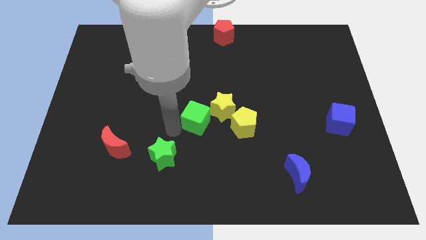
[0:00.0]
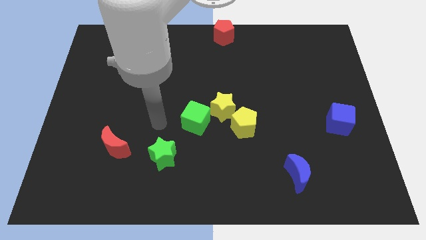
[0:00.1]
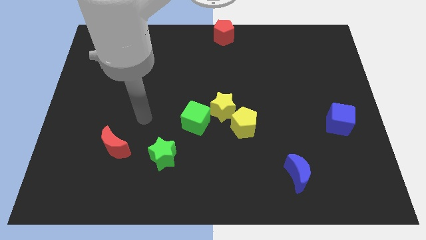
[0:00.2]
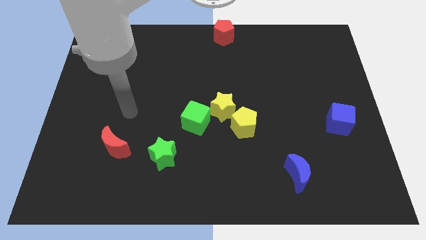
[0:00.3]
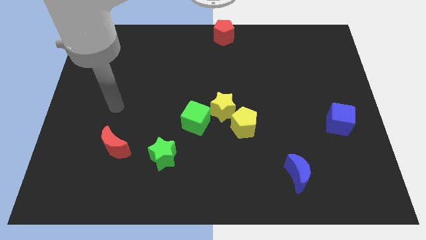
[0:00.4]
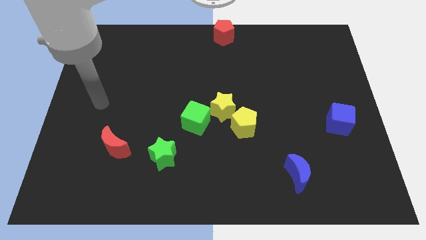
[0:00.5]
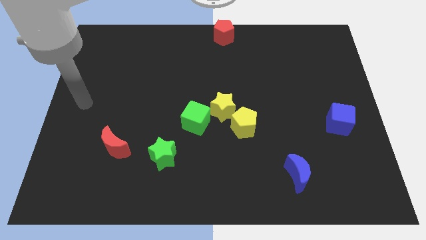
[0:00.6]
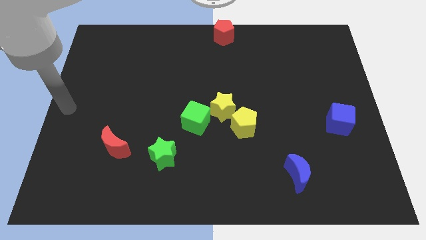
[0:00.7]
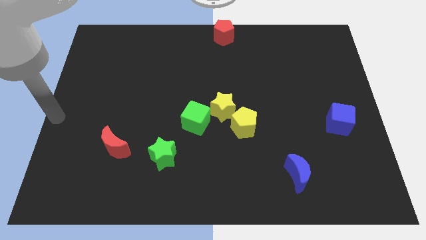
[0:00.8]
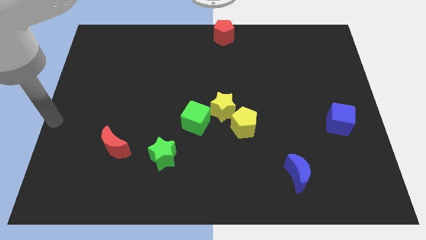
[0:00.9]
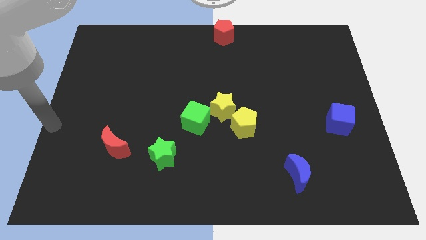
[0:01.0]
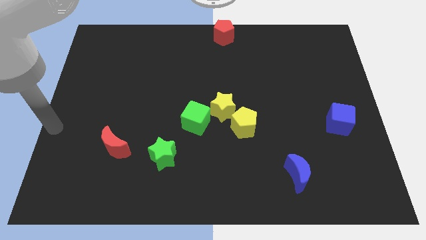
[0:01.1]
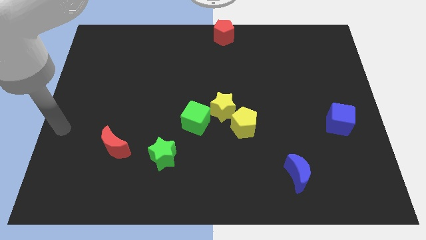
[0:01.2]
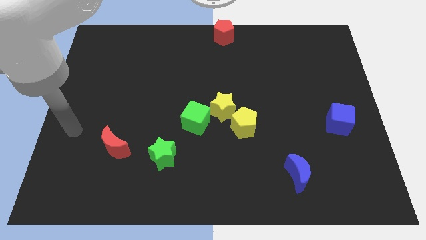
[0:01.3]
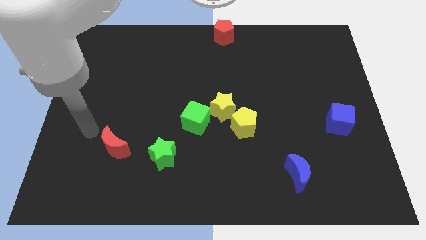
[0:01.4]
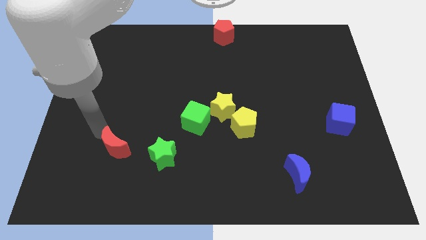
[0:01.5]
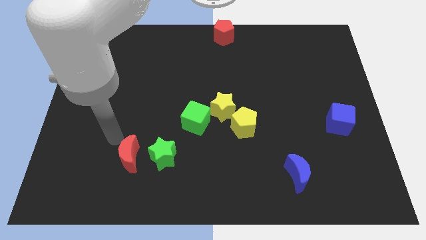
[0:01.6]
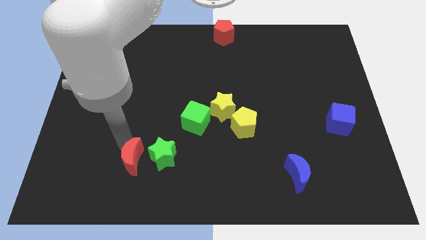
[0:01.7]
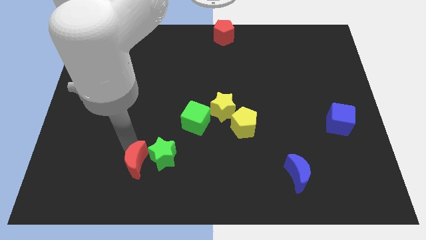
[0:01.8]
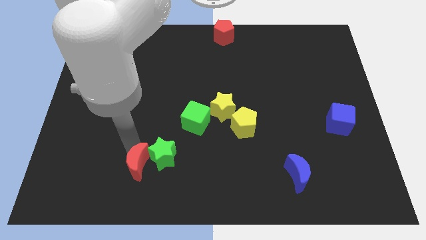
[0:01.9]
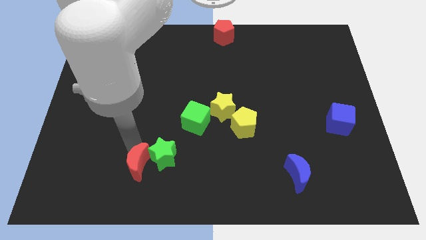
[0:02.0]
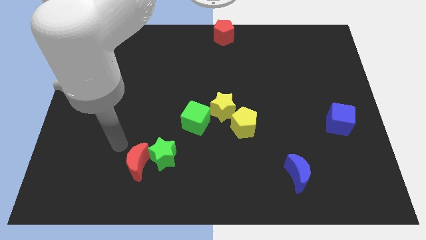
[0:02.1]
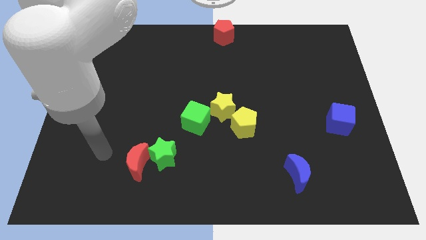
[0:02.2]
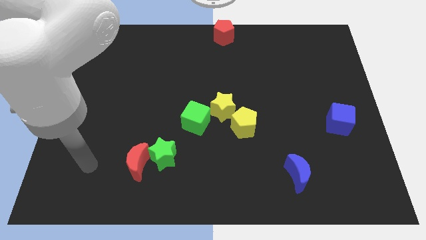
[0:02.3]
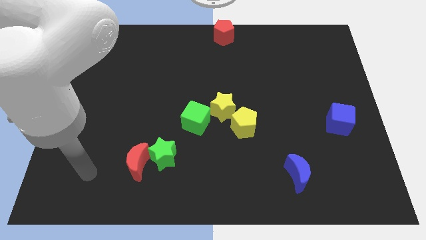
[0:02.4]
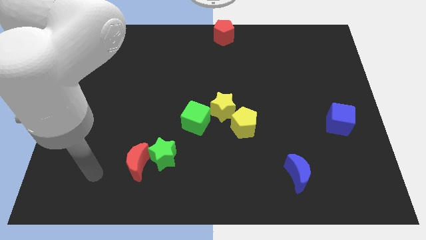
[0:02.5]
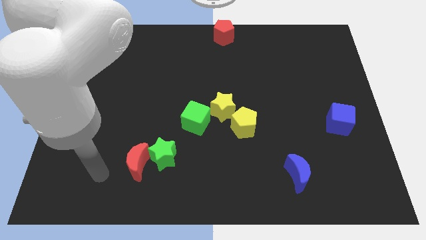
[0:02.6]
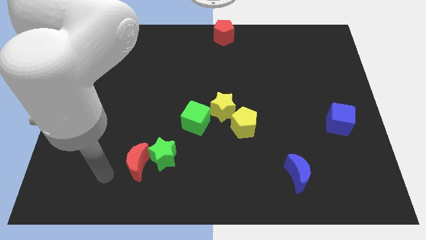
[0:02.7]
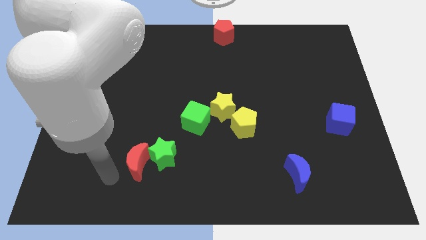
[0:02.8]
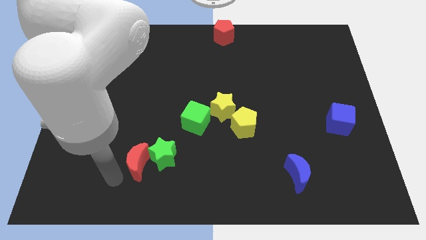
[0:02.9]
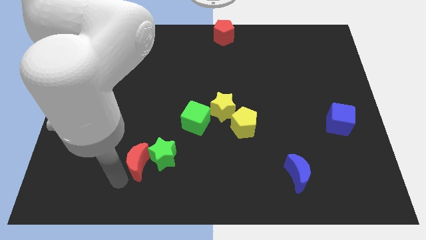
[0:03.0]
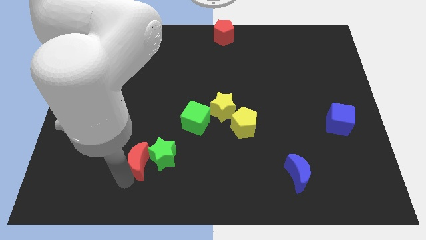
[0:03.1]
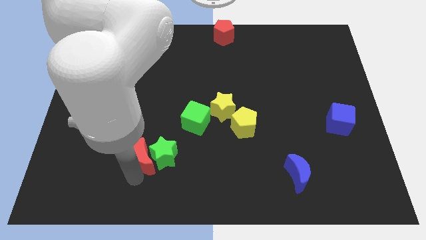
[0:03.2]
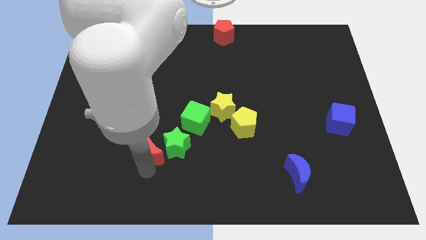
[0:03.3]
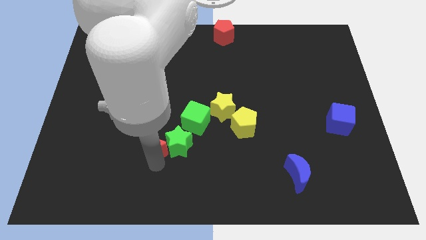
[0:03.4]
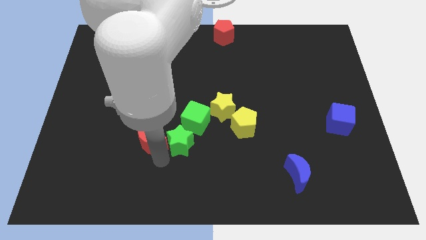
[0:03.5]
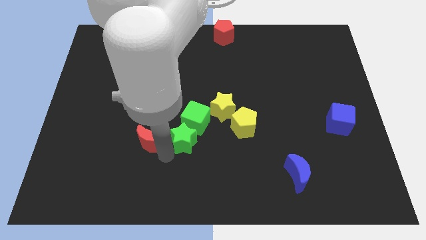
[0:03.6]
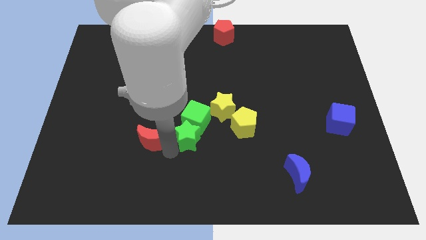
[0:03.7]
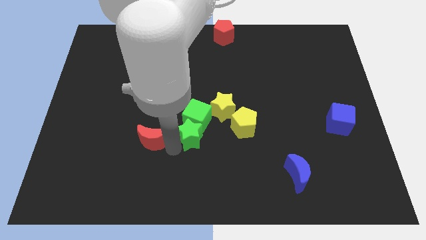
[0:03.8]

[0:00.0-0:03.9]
move the green star and red crescent to the group of blocks

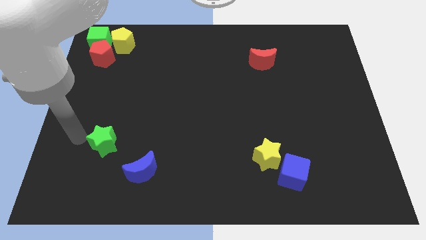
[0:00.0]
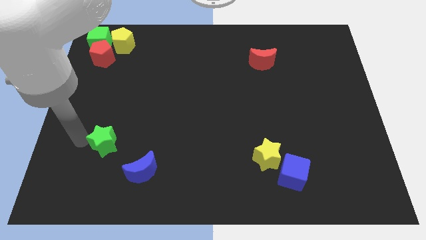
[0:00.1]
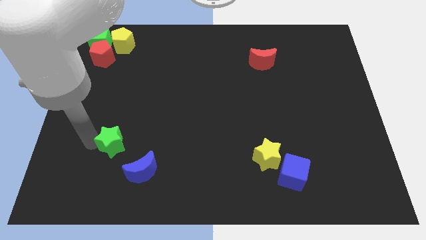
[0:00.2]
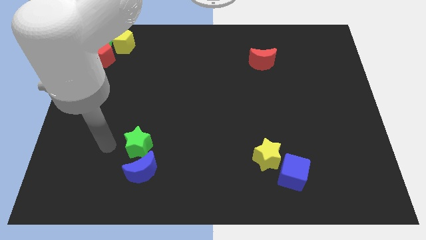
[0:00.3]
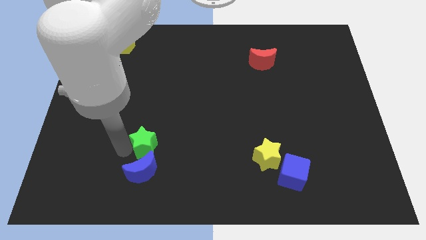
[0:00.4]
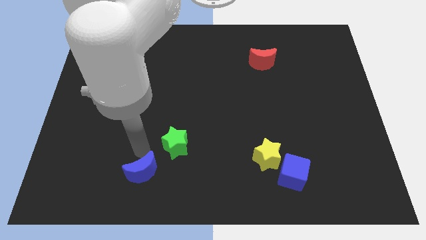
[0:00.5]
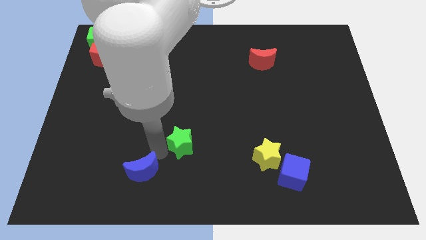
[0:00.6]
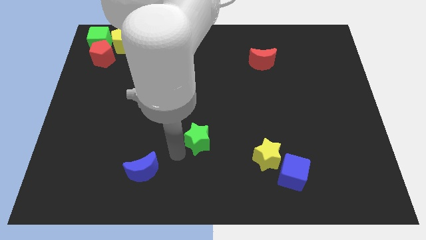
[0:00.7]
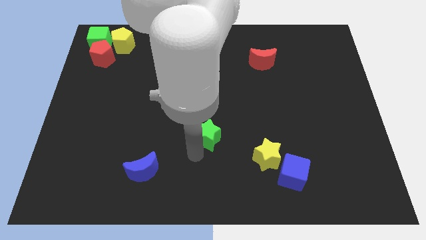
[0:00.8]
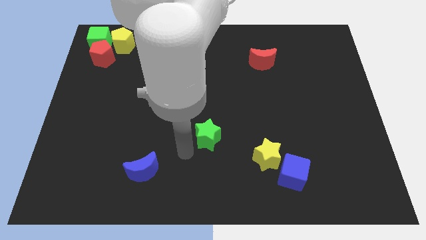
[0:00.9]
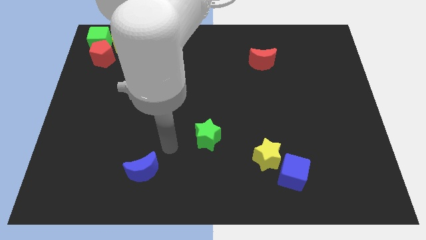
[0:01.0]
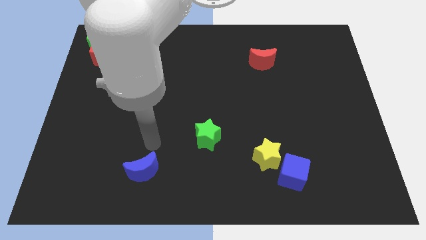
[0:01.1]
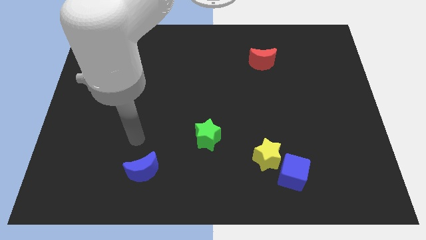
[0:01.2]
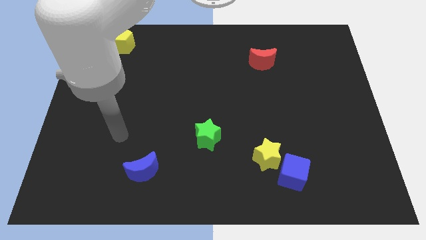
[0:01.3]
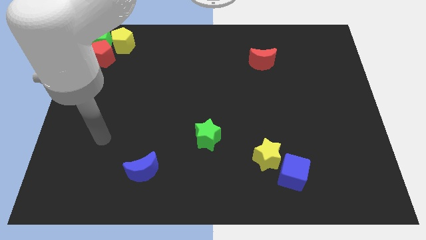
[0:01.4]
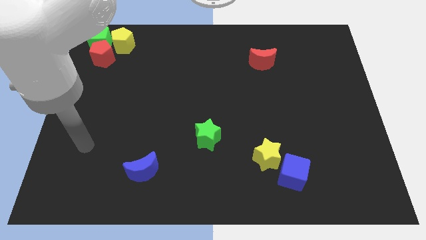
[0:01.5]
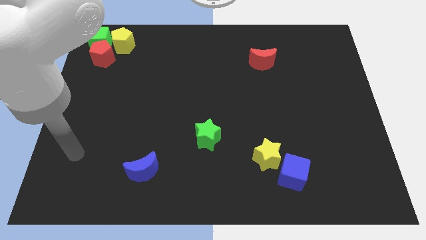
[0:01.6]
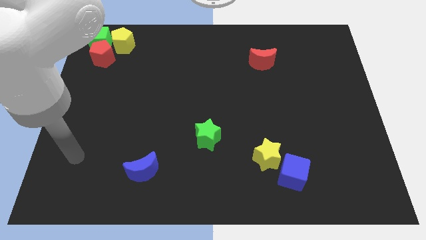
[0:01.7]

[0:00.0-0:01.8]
push the green star towards the center of the board

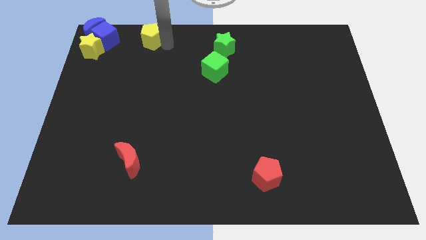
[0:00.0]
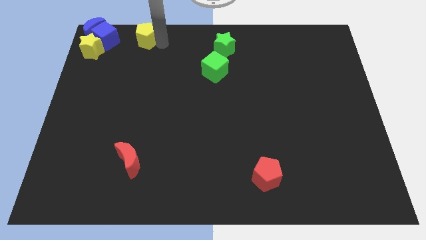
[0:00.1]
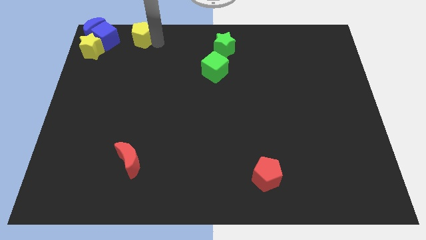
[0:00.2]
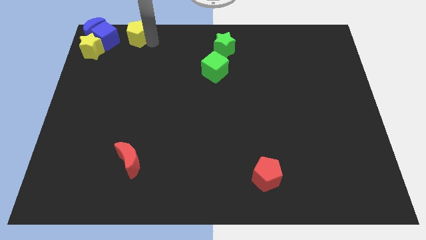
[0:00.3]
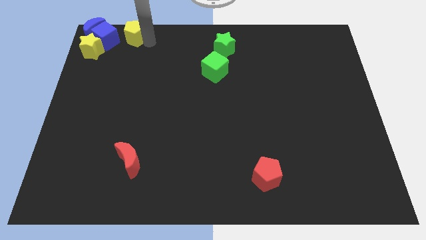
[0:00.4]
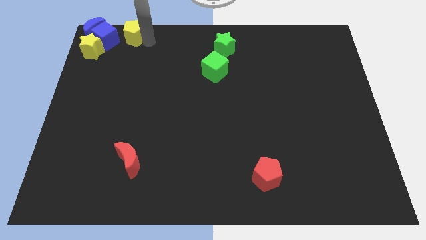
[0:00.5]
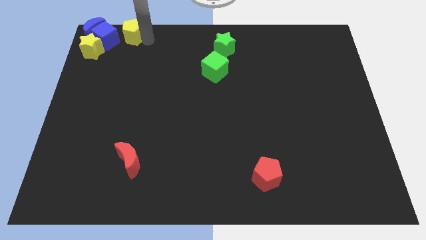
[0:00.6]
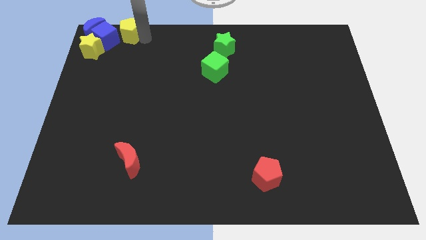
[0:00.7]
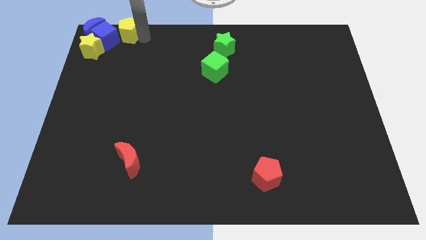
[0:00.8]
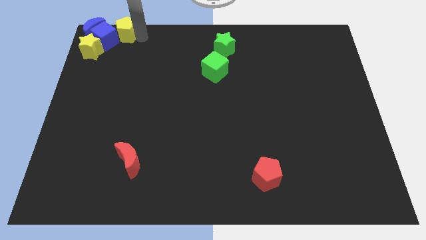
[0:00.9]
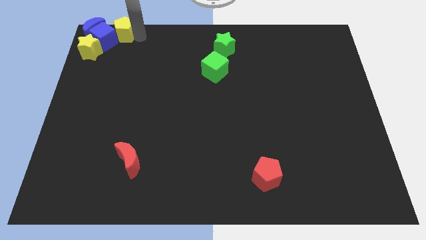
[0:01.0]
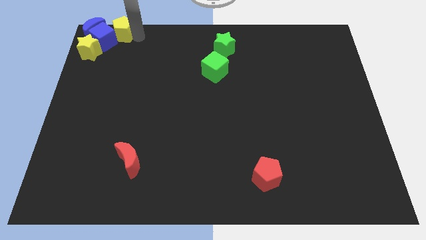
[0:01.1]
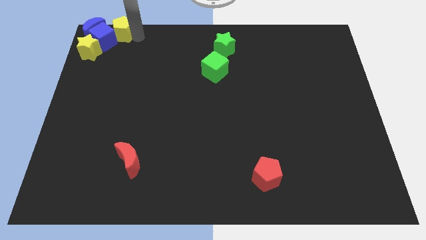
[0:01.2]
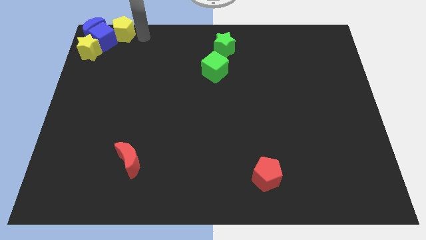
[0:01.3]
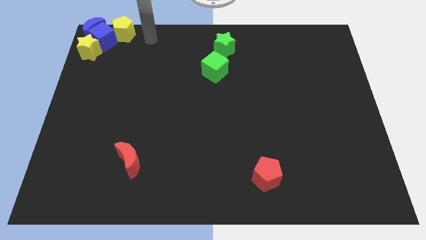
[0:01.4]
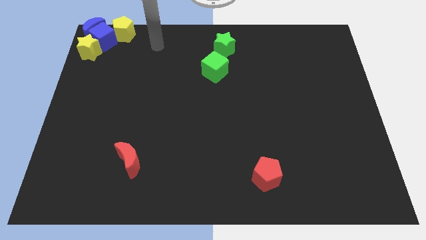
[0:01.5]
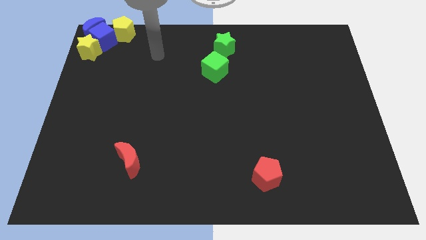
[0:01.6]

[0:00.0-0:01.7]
slightly push the yellow pentagon into the group of objects

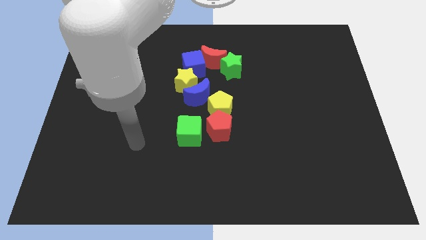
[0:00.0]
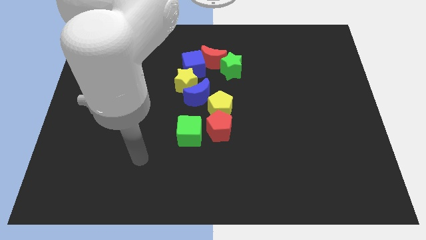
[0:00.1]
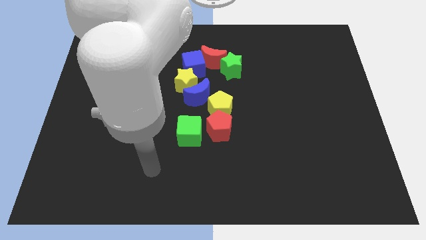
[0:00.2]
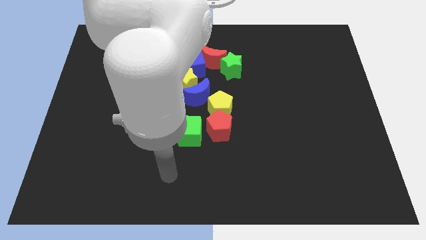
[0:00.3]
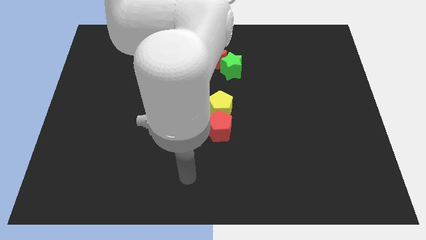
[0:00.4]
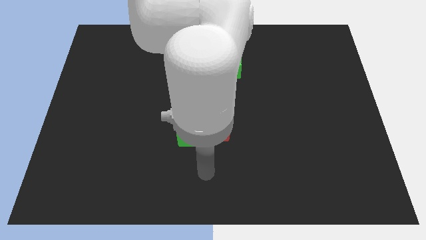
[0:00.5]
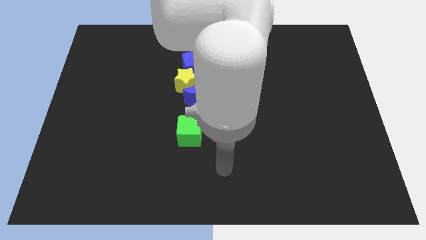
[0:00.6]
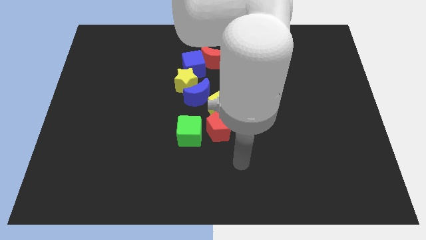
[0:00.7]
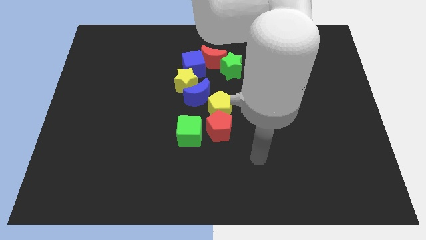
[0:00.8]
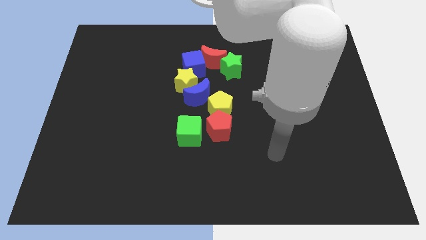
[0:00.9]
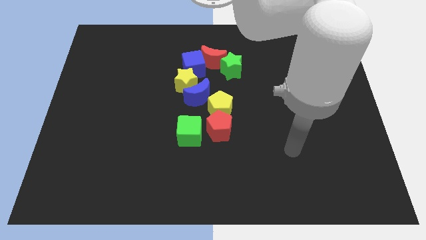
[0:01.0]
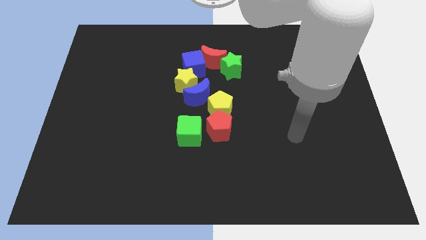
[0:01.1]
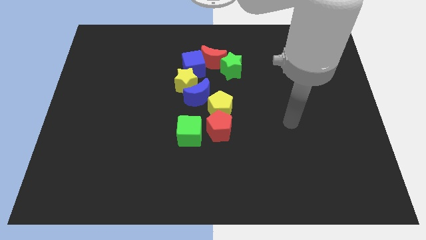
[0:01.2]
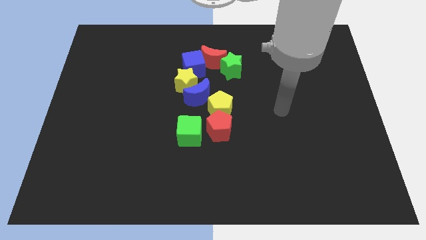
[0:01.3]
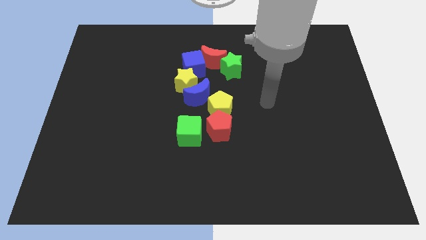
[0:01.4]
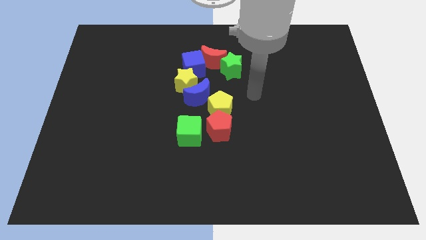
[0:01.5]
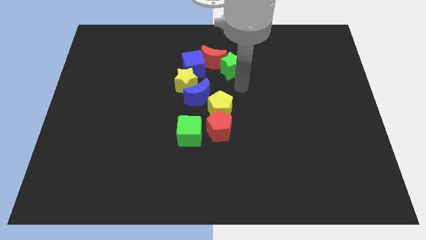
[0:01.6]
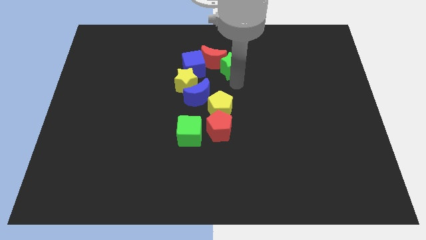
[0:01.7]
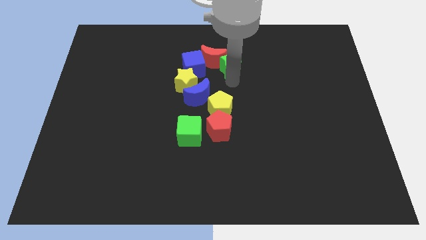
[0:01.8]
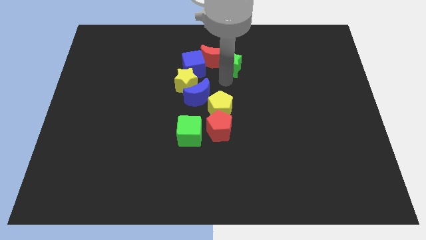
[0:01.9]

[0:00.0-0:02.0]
move the arm into the green star
